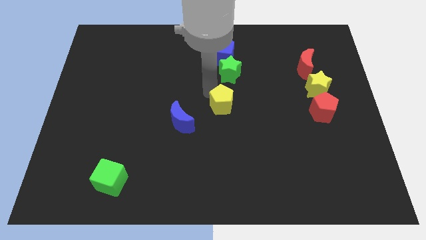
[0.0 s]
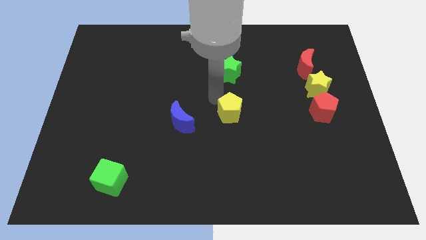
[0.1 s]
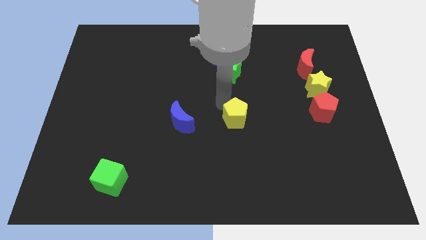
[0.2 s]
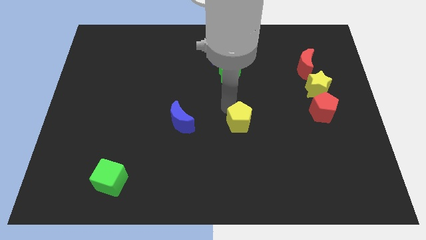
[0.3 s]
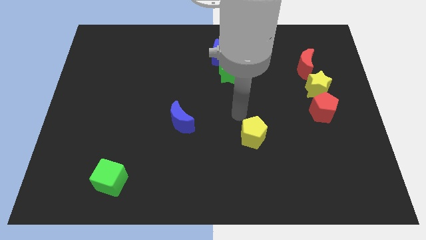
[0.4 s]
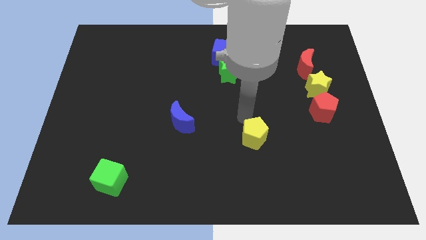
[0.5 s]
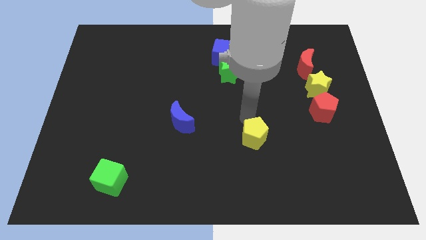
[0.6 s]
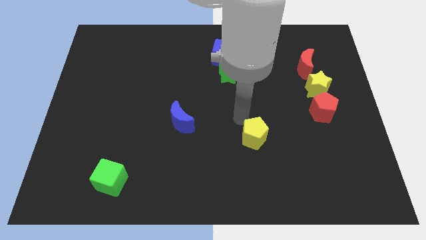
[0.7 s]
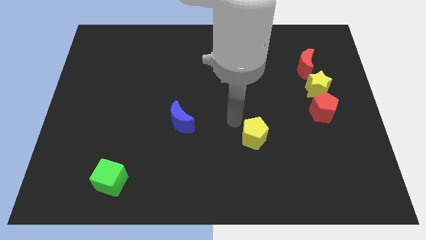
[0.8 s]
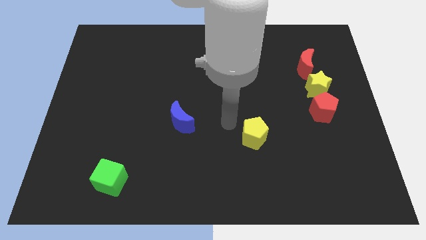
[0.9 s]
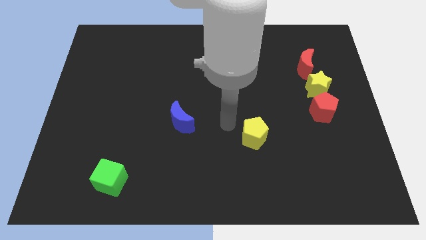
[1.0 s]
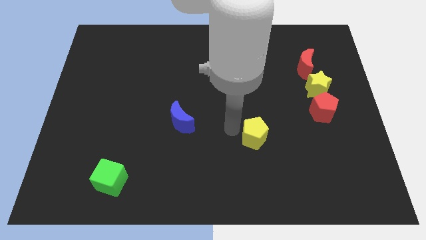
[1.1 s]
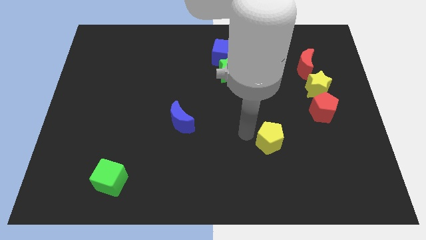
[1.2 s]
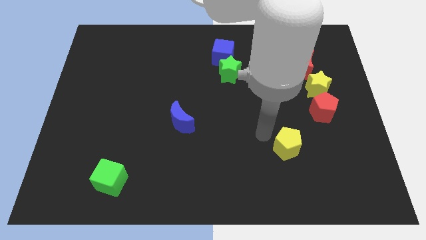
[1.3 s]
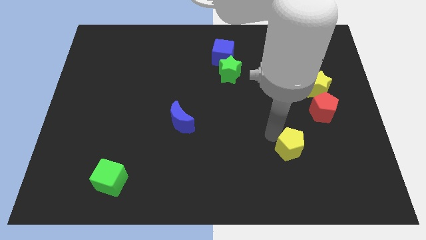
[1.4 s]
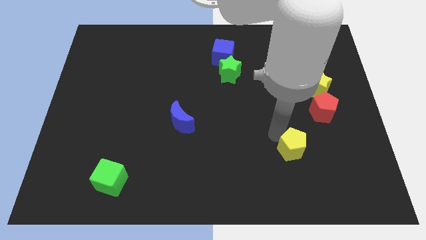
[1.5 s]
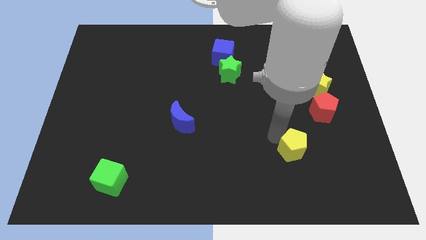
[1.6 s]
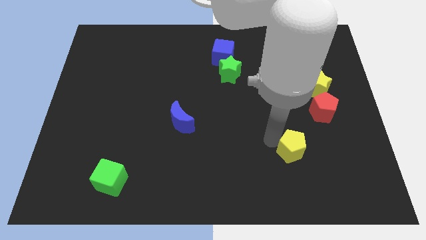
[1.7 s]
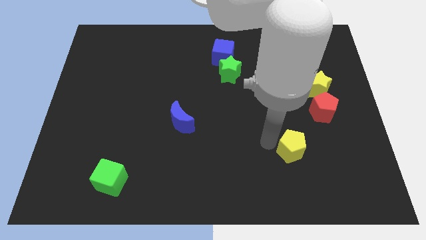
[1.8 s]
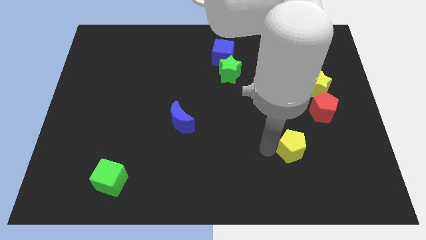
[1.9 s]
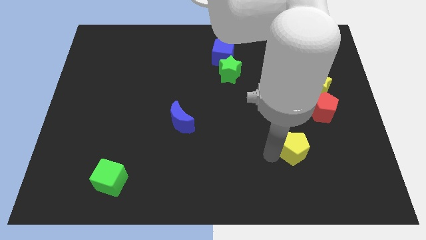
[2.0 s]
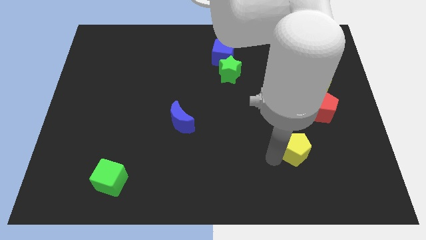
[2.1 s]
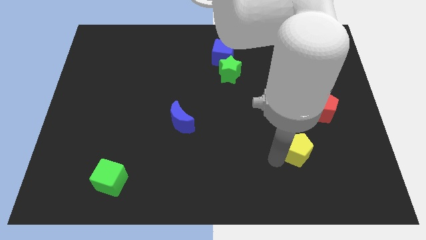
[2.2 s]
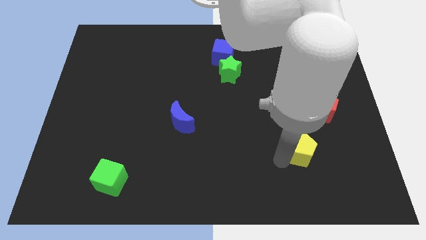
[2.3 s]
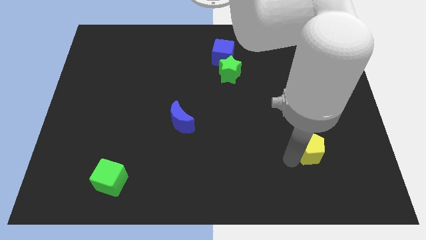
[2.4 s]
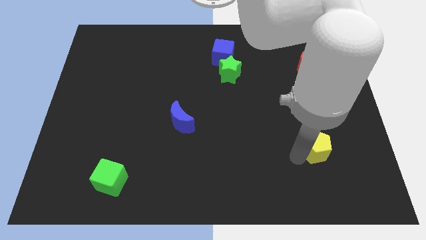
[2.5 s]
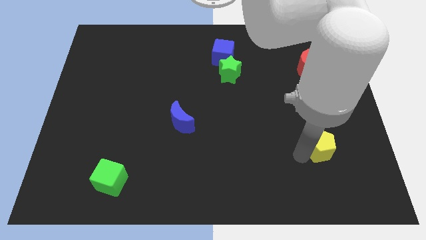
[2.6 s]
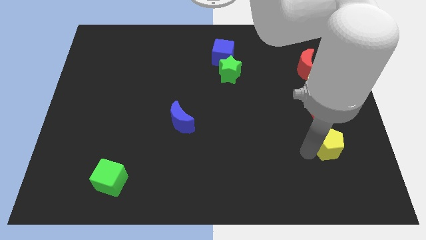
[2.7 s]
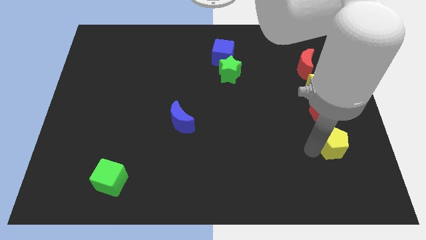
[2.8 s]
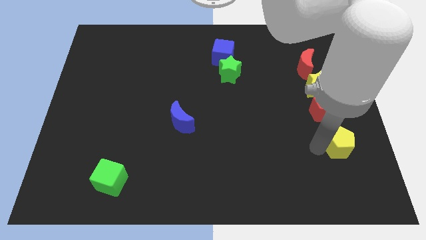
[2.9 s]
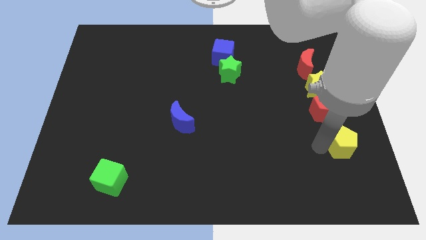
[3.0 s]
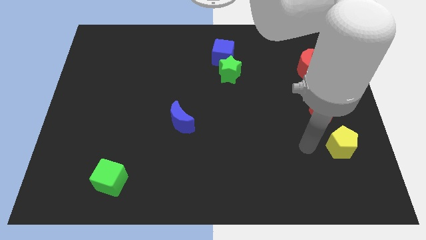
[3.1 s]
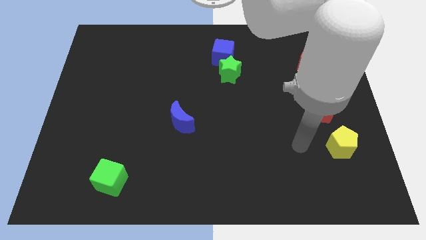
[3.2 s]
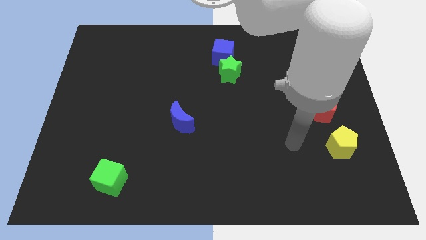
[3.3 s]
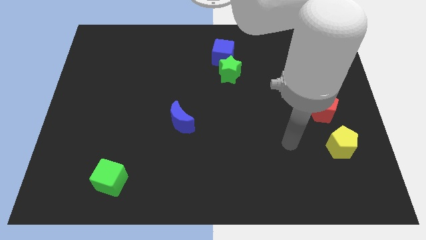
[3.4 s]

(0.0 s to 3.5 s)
place the yellow pentagon at the bottom side of the red pentagon

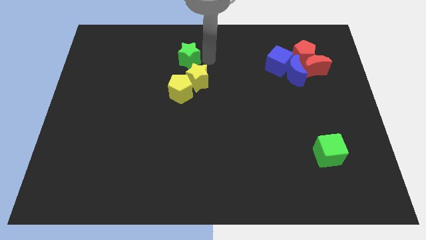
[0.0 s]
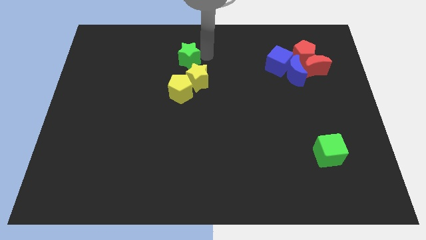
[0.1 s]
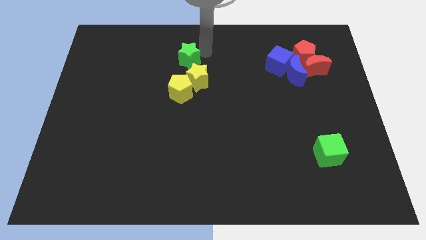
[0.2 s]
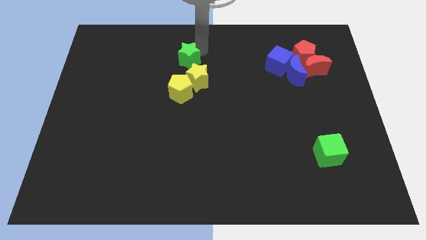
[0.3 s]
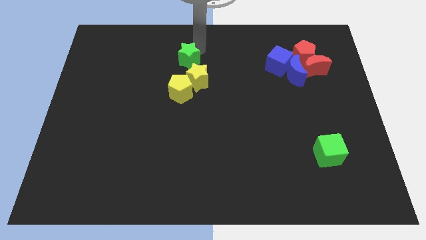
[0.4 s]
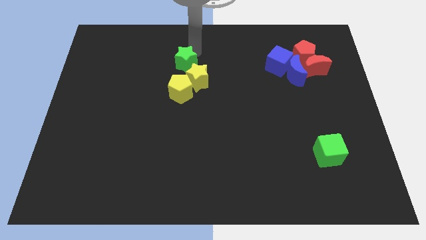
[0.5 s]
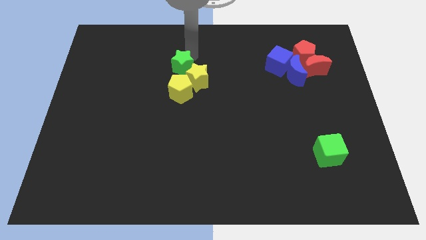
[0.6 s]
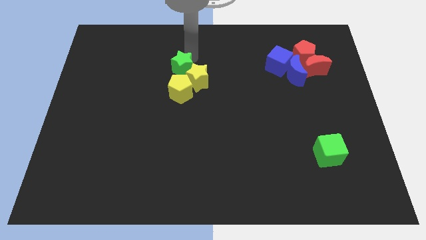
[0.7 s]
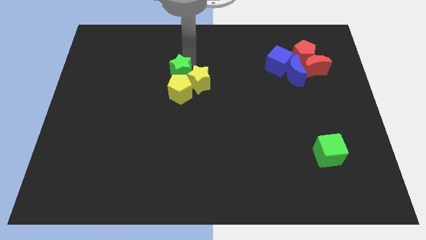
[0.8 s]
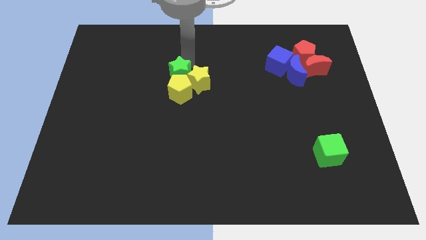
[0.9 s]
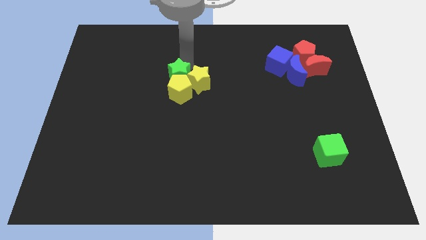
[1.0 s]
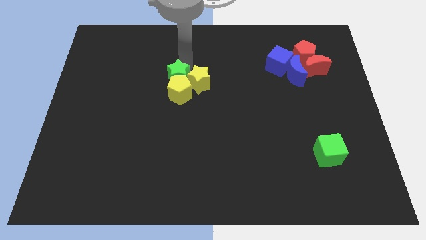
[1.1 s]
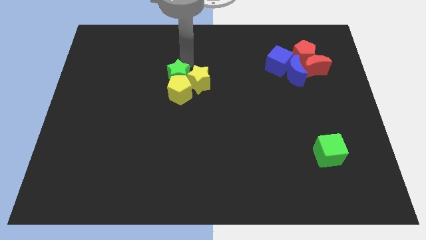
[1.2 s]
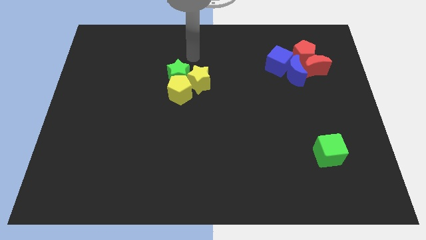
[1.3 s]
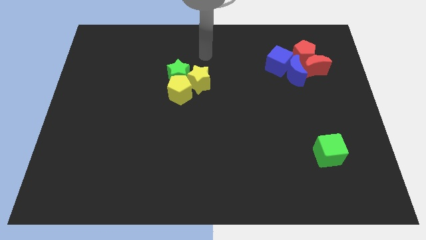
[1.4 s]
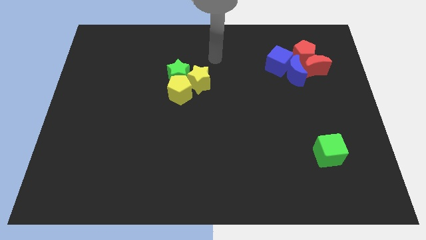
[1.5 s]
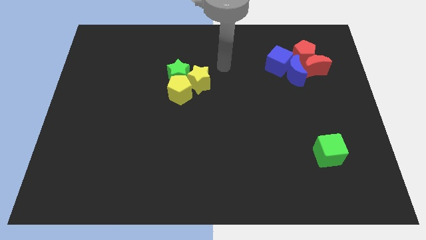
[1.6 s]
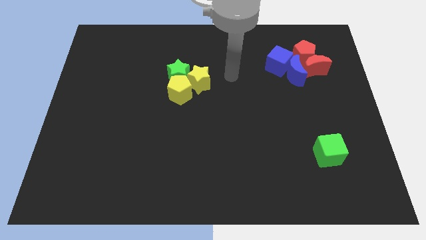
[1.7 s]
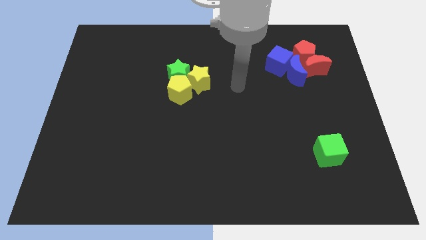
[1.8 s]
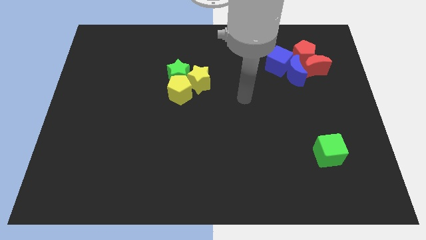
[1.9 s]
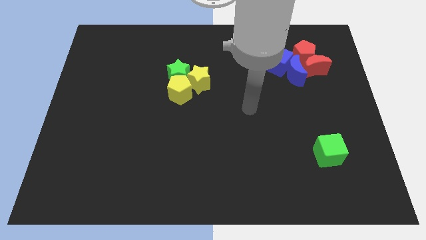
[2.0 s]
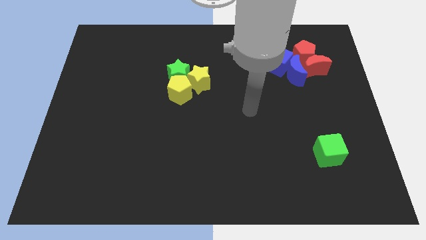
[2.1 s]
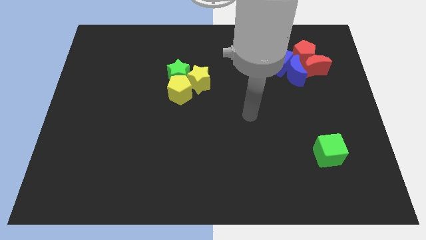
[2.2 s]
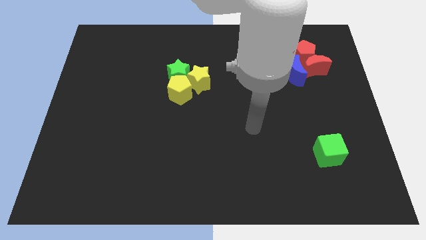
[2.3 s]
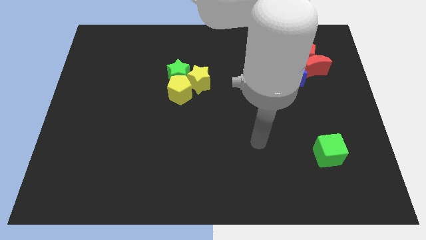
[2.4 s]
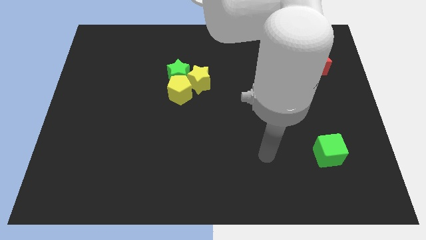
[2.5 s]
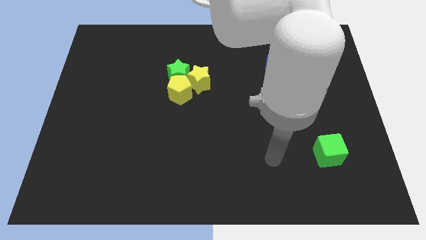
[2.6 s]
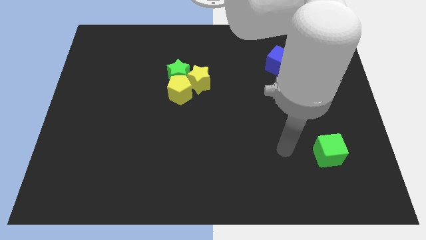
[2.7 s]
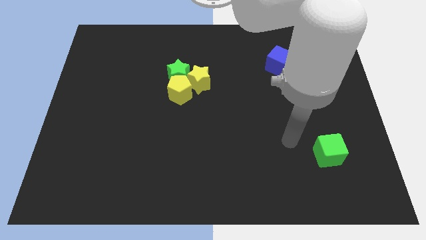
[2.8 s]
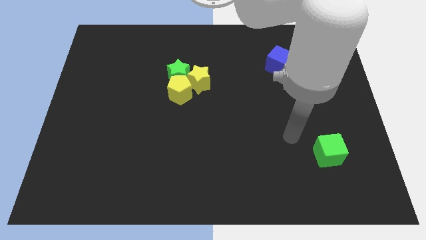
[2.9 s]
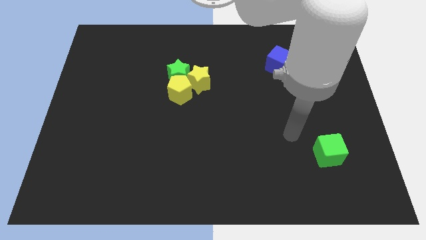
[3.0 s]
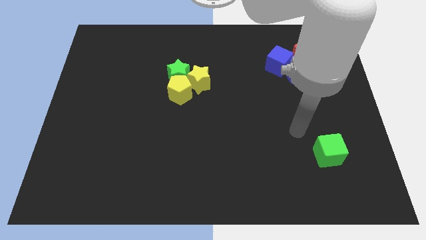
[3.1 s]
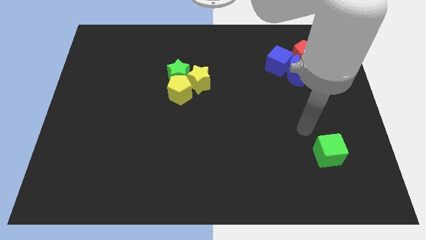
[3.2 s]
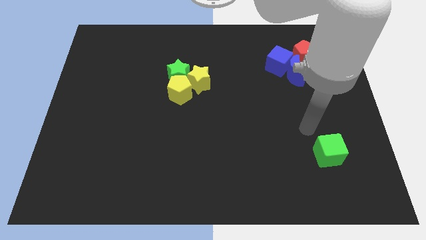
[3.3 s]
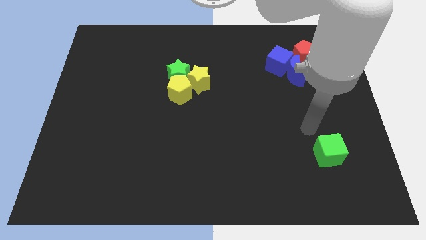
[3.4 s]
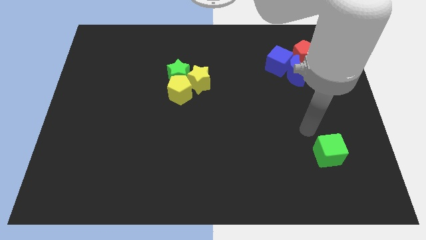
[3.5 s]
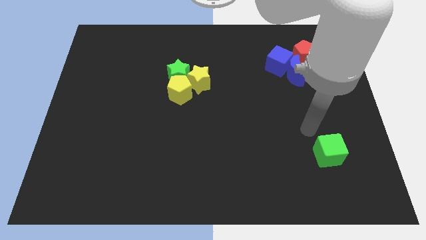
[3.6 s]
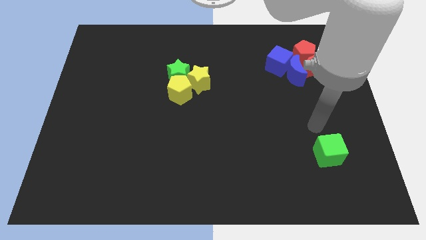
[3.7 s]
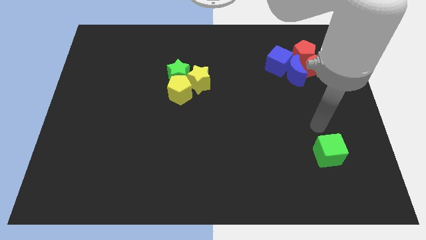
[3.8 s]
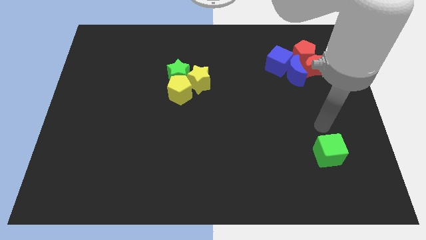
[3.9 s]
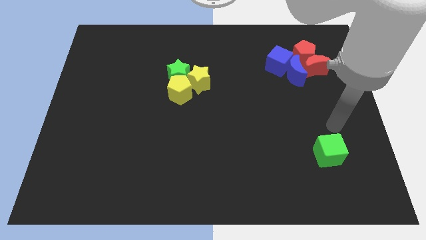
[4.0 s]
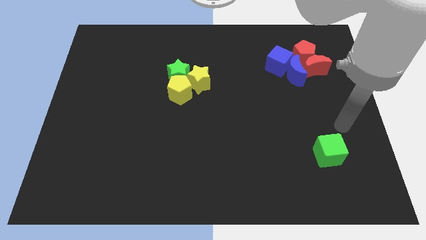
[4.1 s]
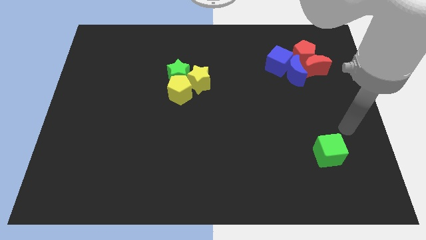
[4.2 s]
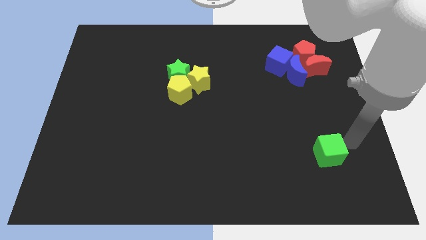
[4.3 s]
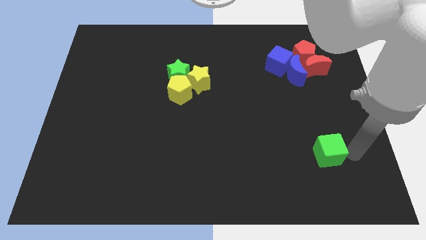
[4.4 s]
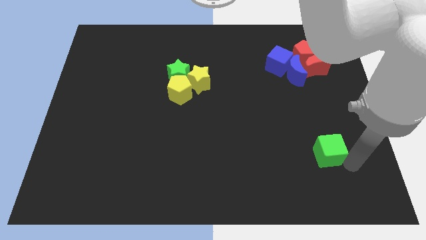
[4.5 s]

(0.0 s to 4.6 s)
move the green star into the yellow pentagon

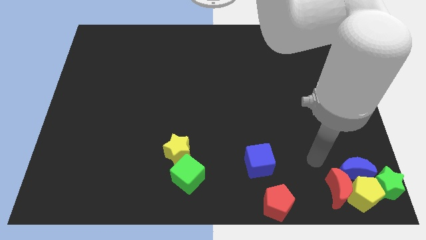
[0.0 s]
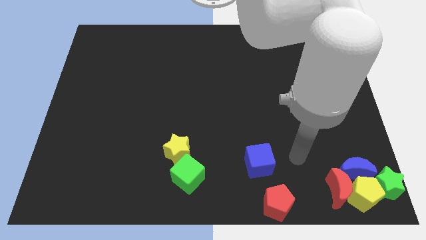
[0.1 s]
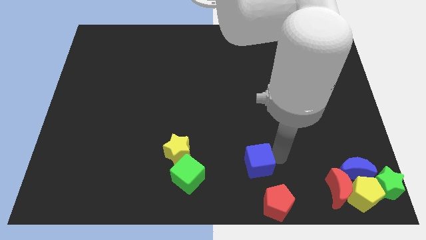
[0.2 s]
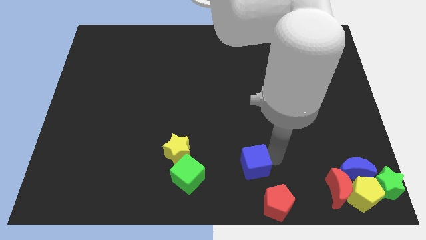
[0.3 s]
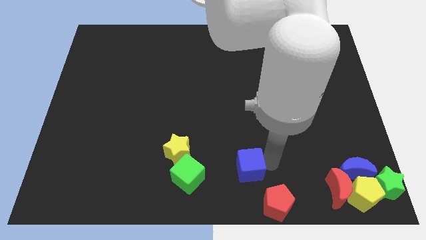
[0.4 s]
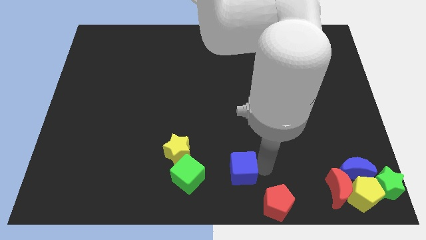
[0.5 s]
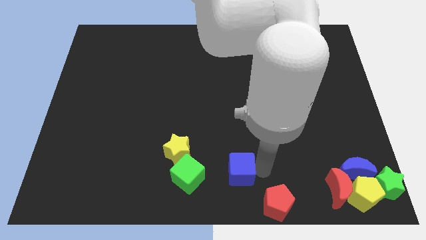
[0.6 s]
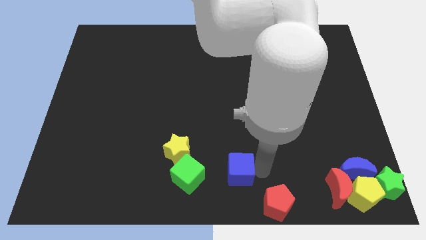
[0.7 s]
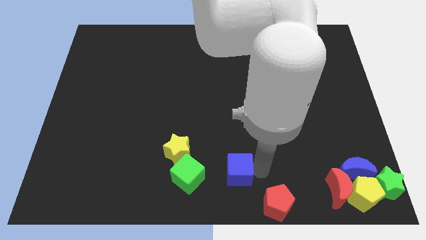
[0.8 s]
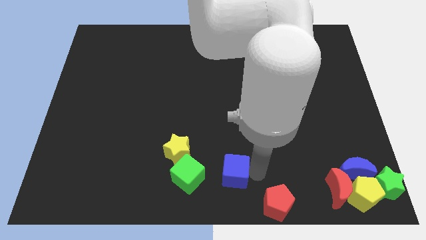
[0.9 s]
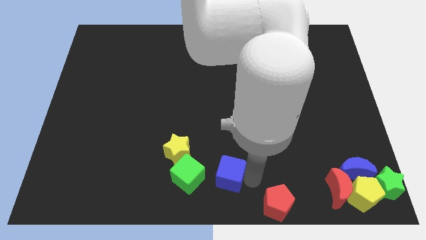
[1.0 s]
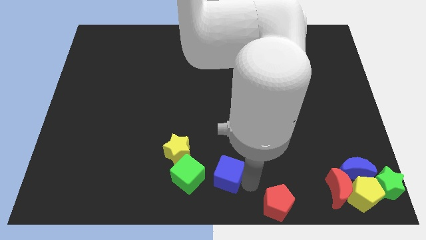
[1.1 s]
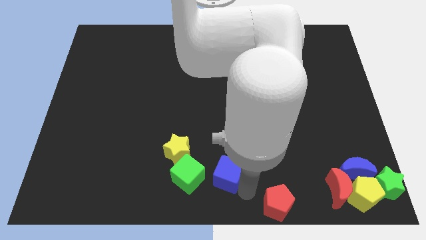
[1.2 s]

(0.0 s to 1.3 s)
move the blue cube near to the green cube
